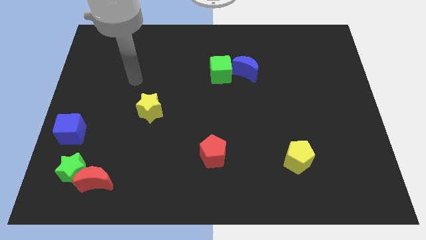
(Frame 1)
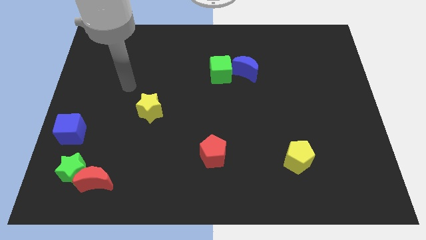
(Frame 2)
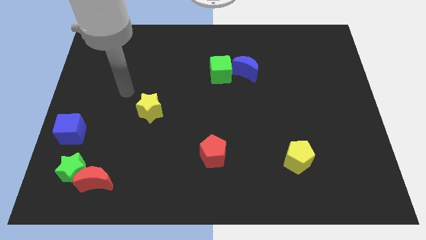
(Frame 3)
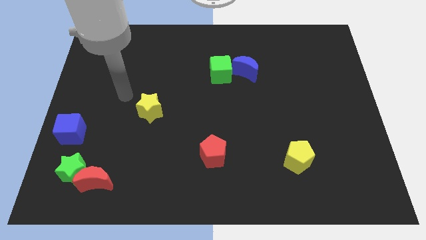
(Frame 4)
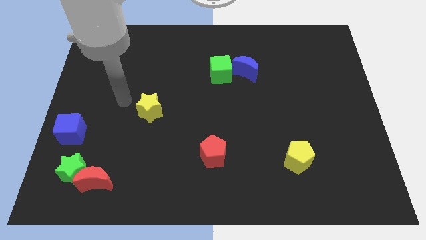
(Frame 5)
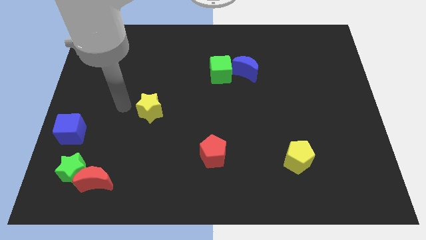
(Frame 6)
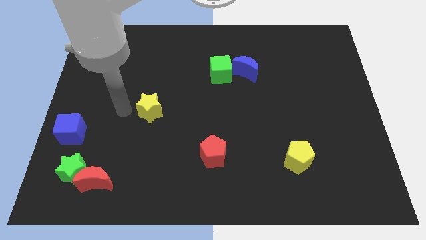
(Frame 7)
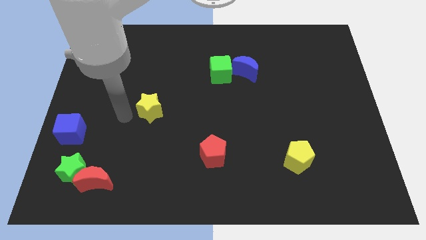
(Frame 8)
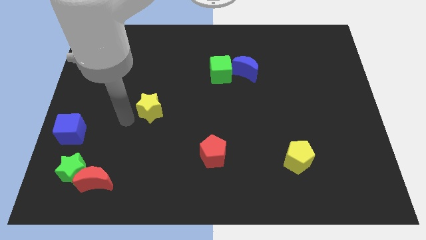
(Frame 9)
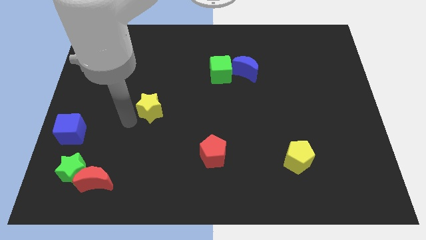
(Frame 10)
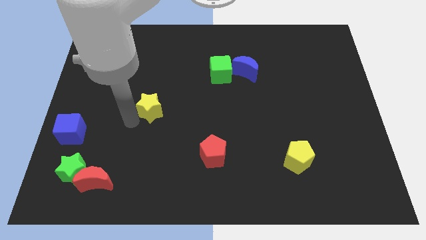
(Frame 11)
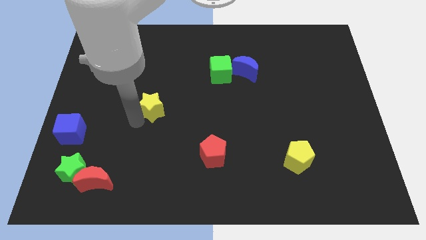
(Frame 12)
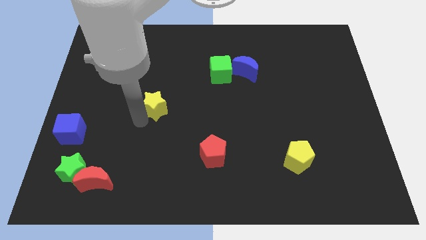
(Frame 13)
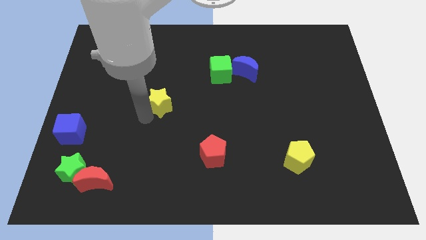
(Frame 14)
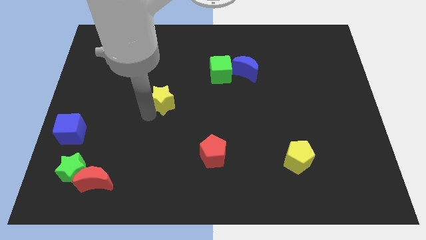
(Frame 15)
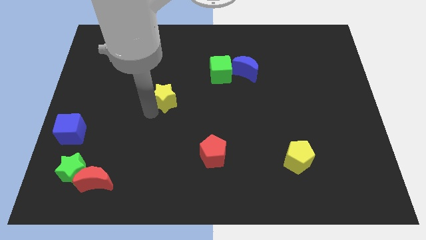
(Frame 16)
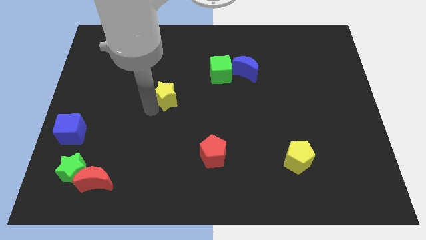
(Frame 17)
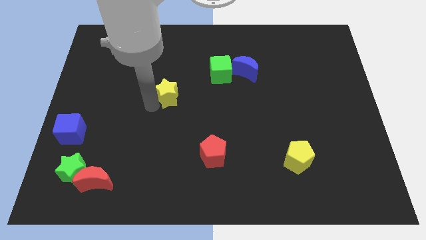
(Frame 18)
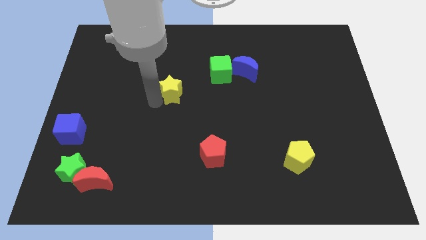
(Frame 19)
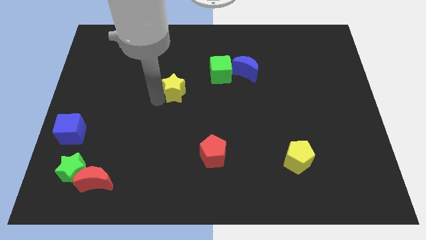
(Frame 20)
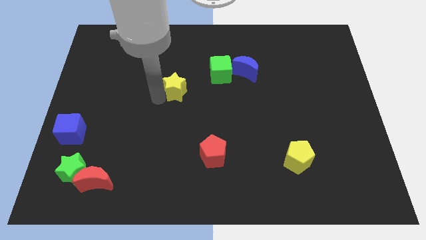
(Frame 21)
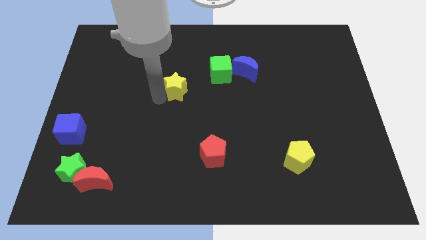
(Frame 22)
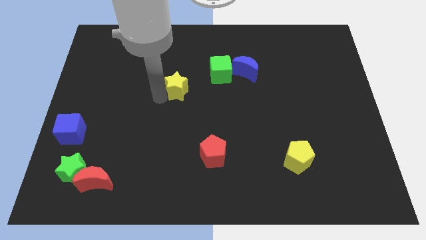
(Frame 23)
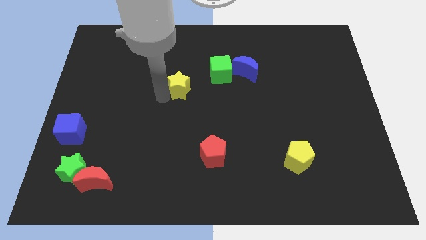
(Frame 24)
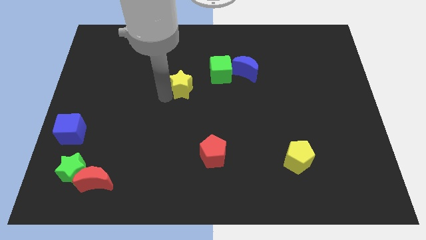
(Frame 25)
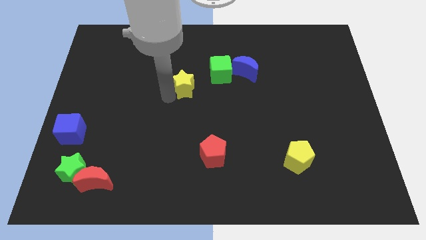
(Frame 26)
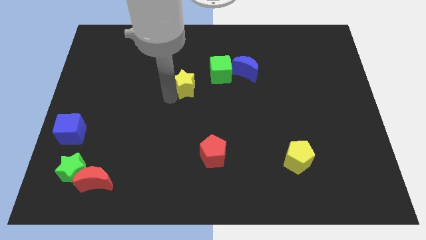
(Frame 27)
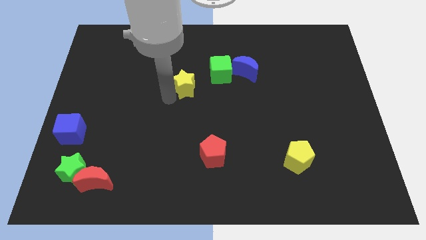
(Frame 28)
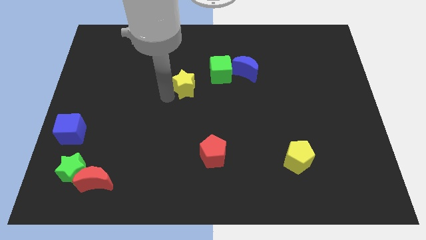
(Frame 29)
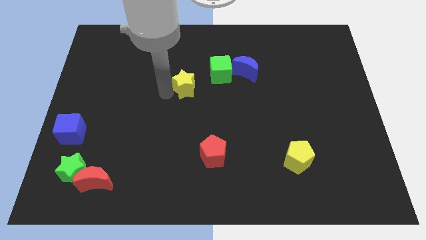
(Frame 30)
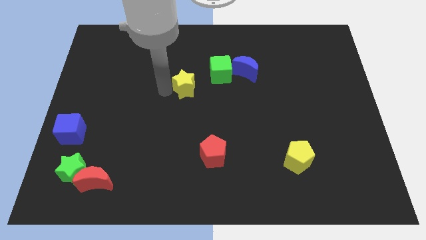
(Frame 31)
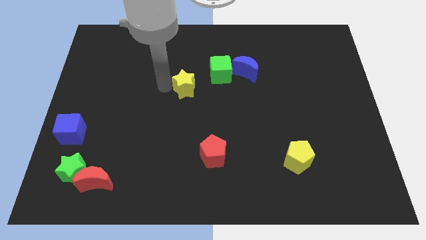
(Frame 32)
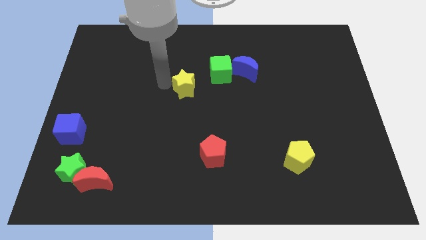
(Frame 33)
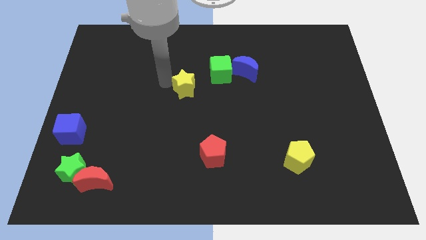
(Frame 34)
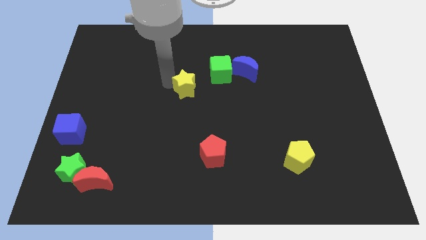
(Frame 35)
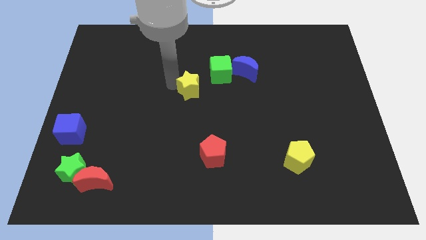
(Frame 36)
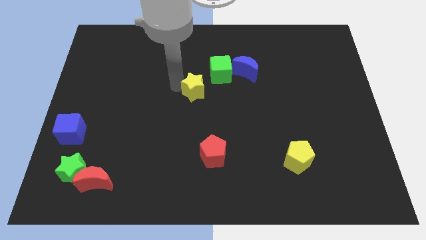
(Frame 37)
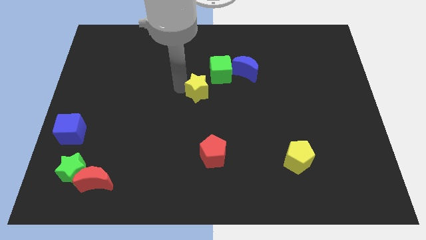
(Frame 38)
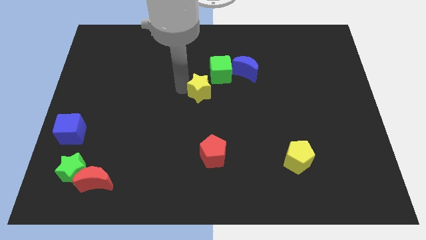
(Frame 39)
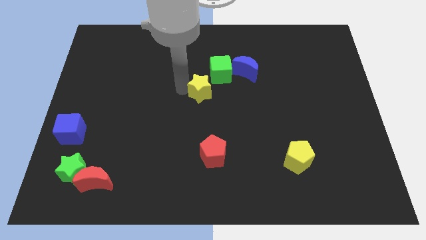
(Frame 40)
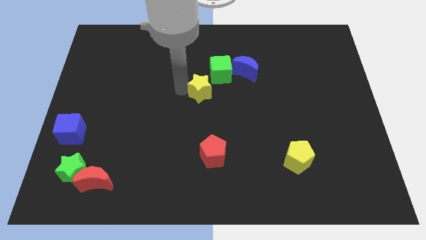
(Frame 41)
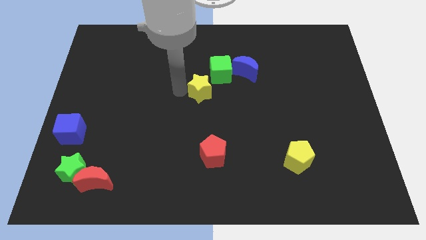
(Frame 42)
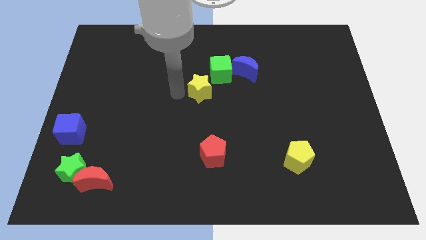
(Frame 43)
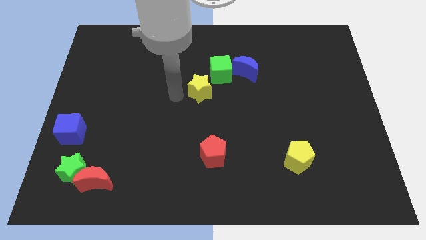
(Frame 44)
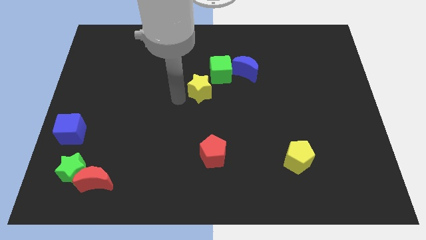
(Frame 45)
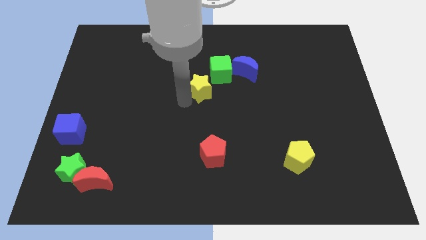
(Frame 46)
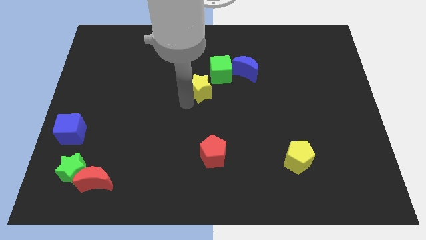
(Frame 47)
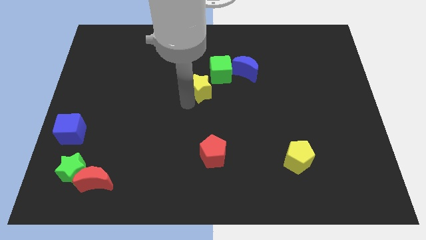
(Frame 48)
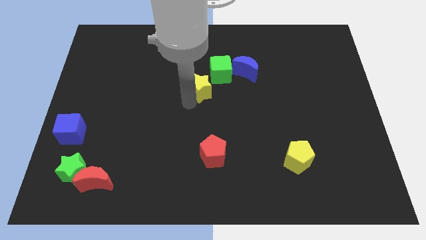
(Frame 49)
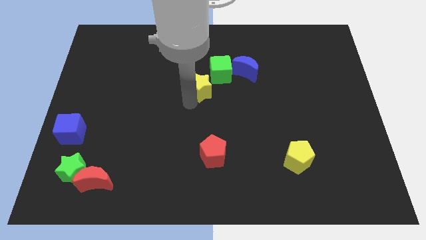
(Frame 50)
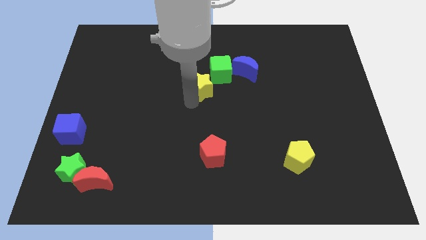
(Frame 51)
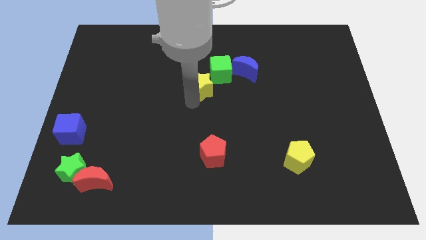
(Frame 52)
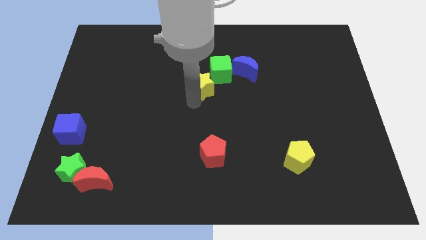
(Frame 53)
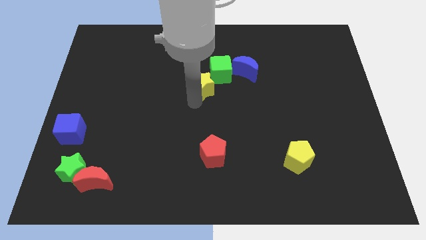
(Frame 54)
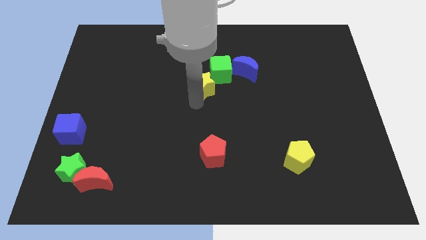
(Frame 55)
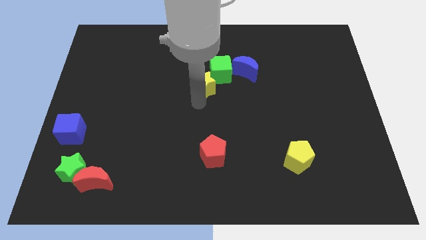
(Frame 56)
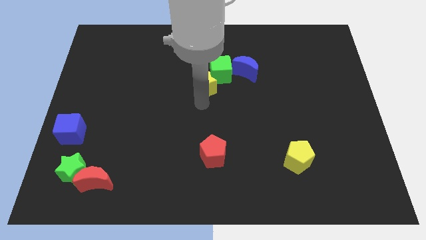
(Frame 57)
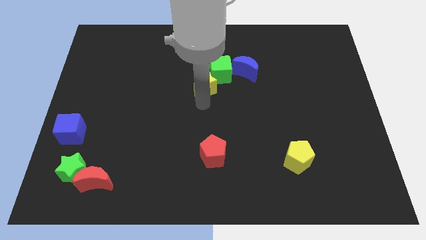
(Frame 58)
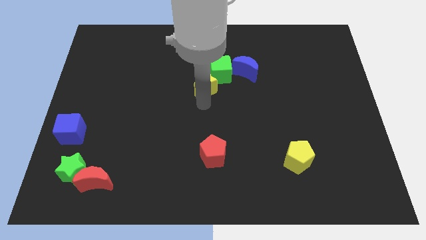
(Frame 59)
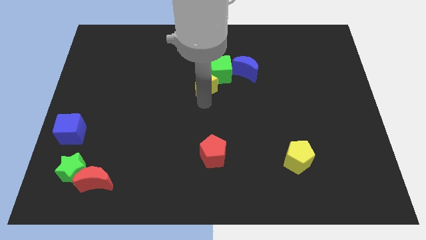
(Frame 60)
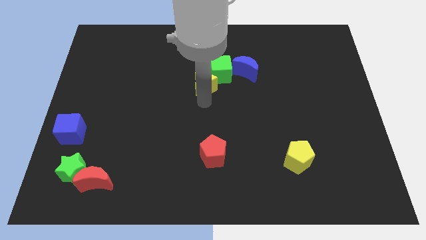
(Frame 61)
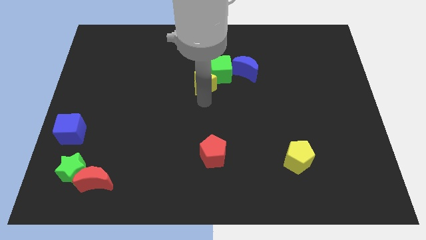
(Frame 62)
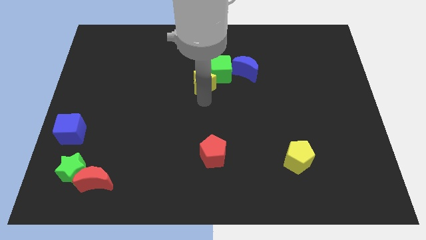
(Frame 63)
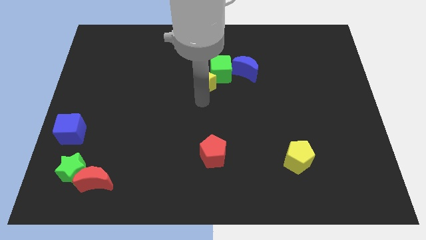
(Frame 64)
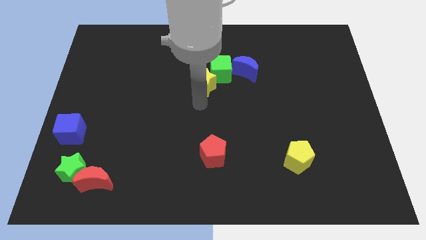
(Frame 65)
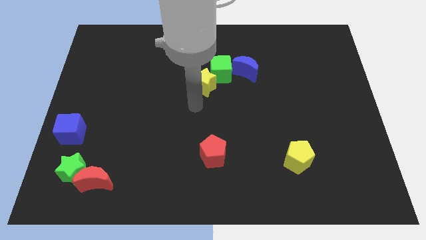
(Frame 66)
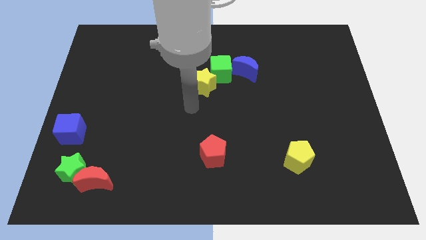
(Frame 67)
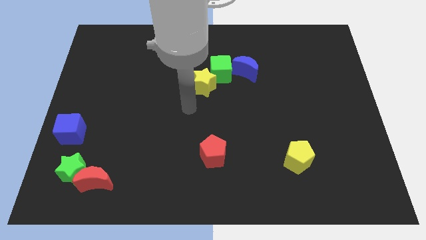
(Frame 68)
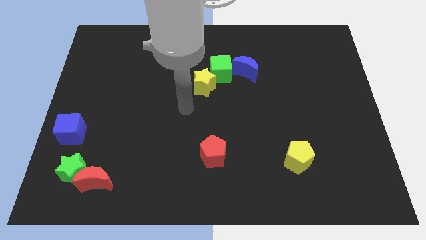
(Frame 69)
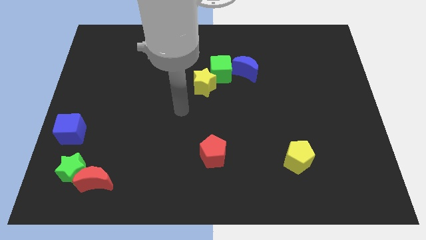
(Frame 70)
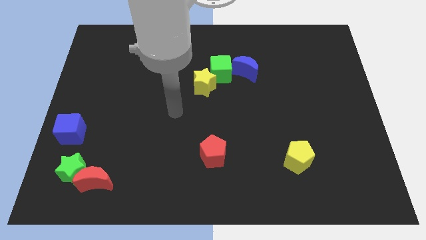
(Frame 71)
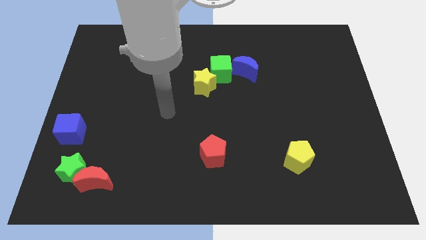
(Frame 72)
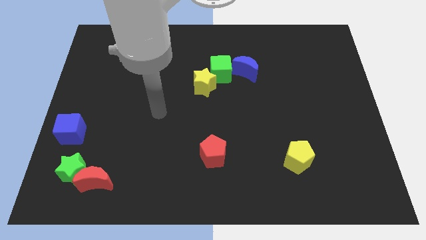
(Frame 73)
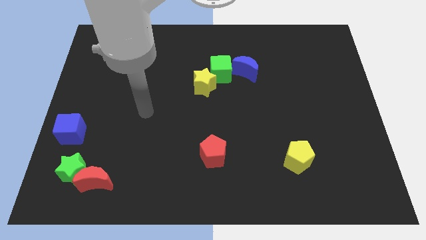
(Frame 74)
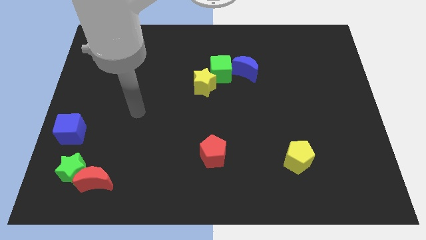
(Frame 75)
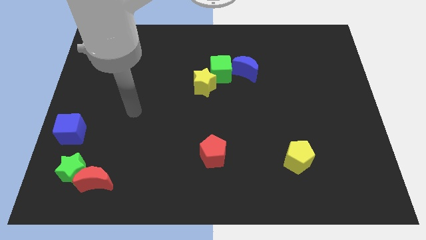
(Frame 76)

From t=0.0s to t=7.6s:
push the yellow star into the green cube

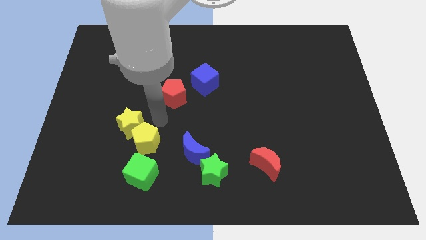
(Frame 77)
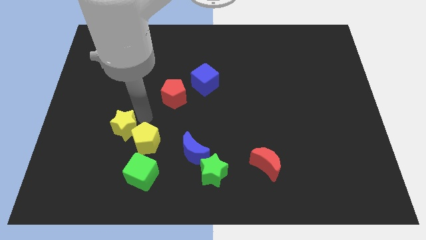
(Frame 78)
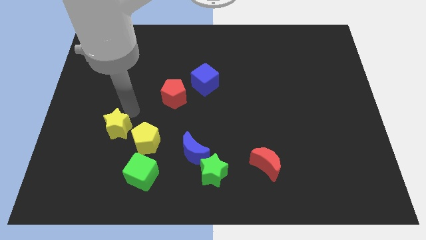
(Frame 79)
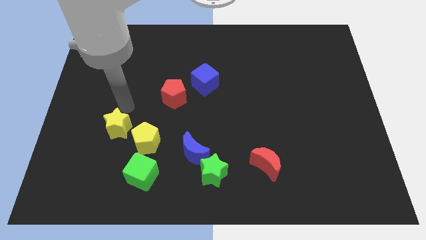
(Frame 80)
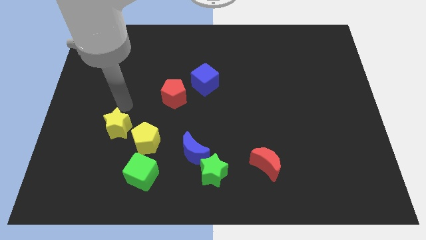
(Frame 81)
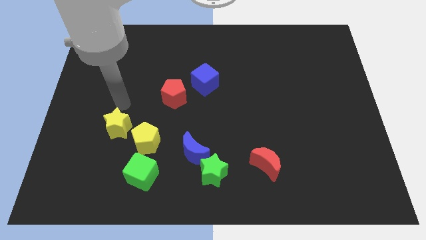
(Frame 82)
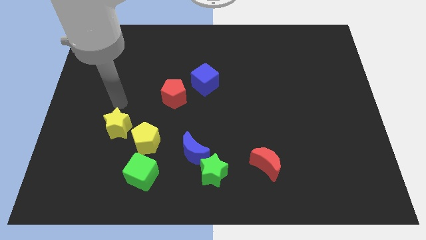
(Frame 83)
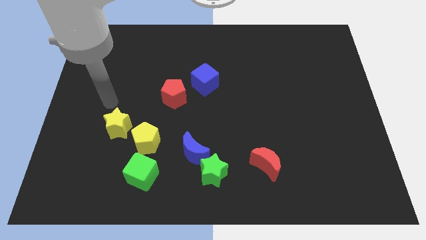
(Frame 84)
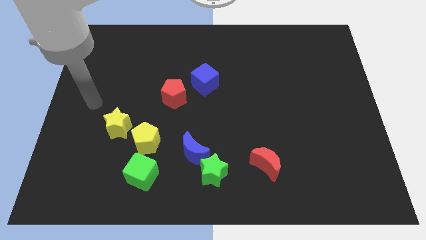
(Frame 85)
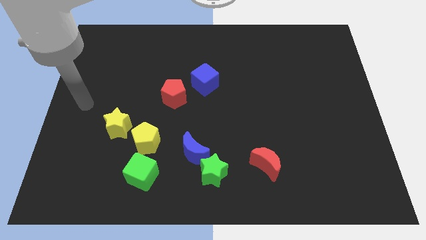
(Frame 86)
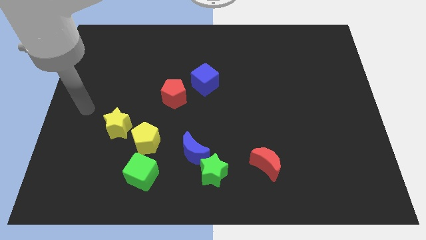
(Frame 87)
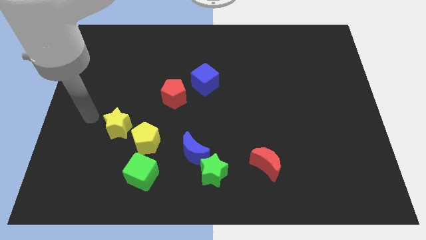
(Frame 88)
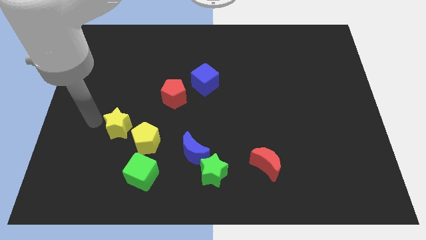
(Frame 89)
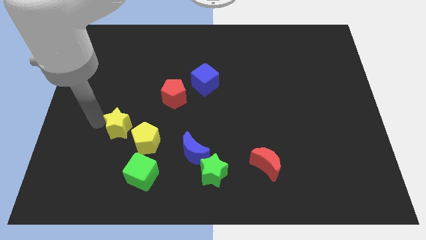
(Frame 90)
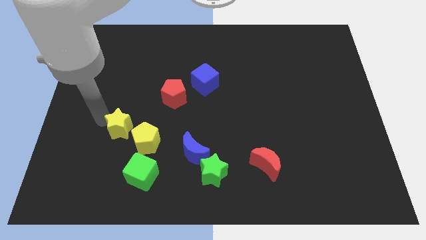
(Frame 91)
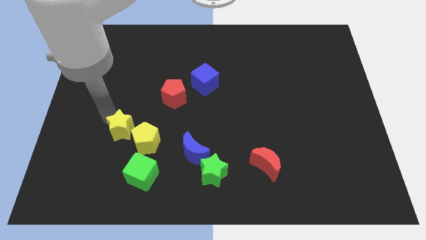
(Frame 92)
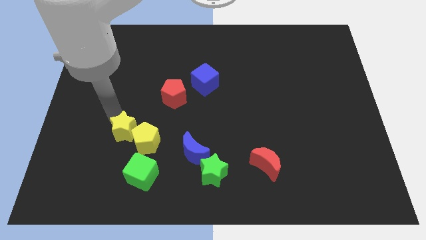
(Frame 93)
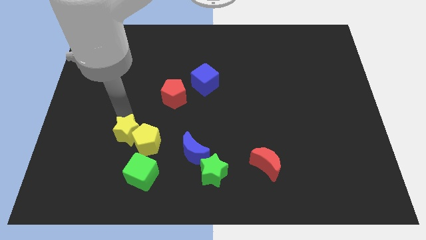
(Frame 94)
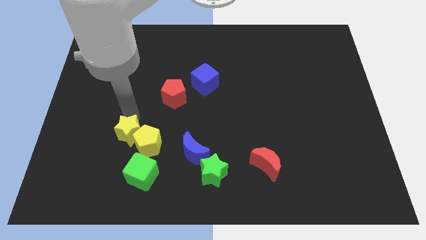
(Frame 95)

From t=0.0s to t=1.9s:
push yellow star into yellow pentagon
